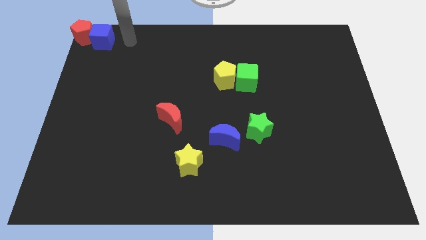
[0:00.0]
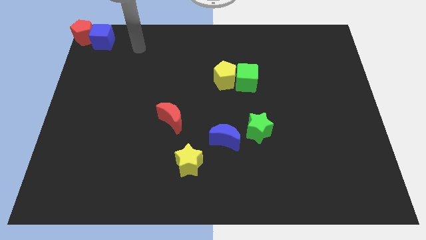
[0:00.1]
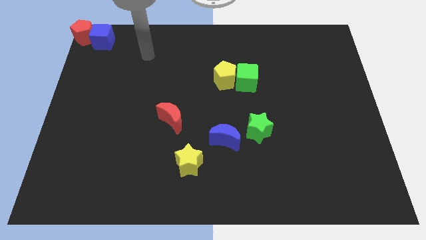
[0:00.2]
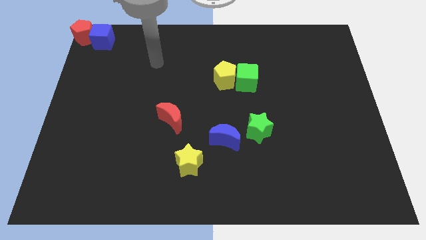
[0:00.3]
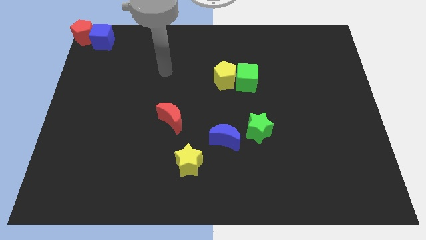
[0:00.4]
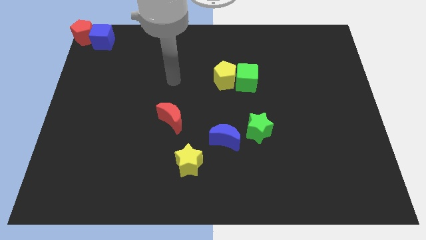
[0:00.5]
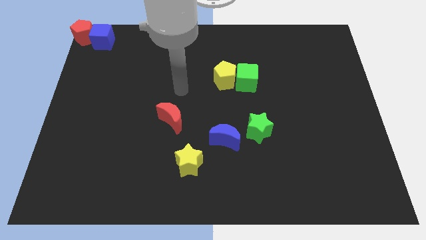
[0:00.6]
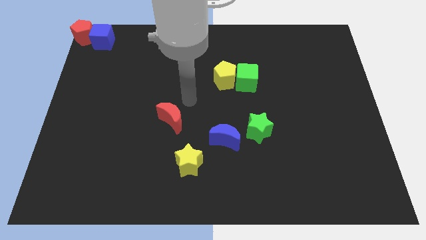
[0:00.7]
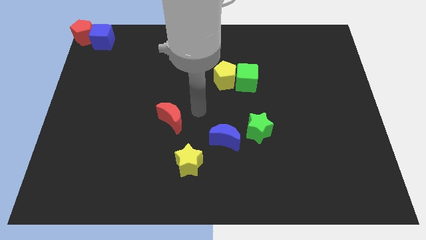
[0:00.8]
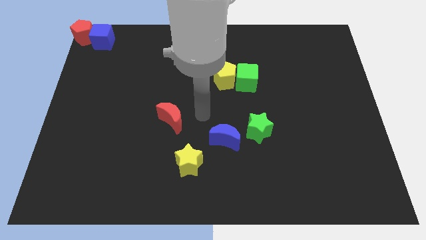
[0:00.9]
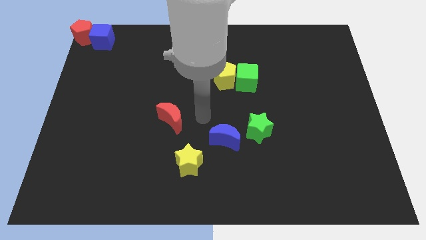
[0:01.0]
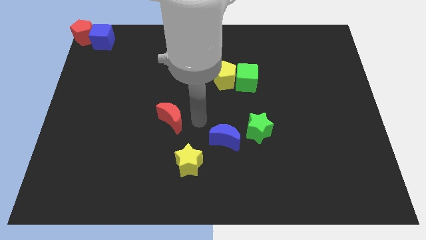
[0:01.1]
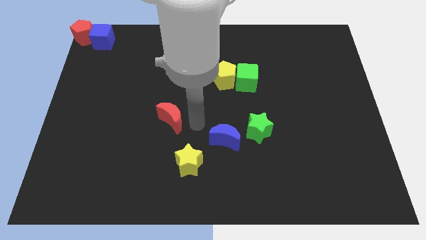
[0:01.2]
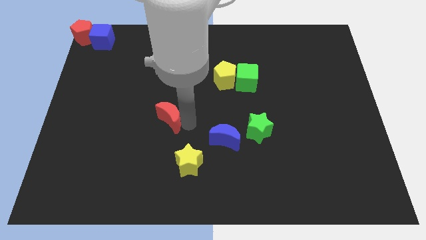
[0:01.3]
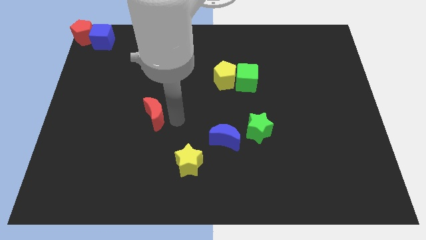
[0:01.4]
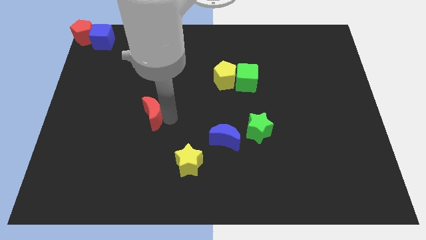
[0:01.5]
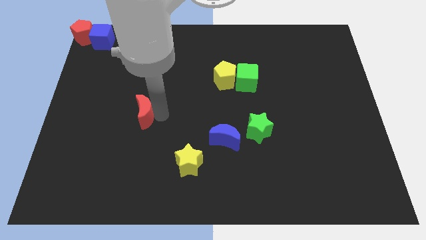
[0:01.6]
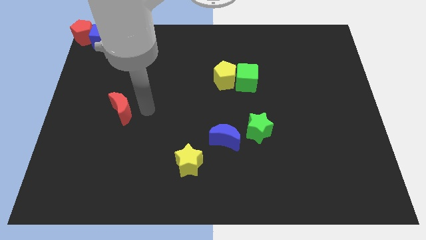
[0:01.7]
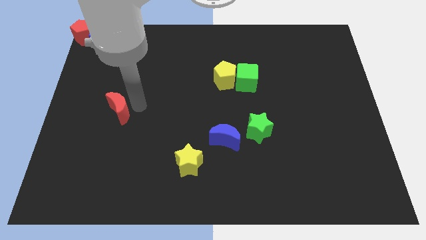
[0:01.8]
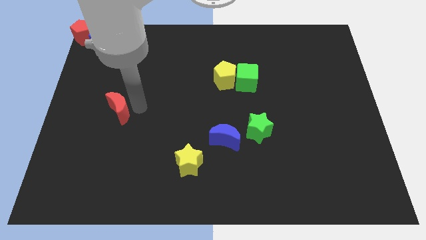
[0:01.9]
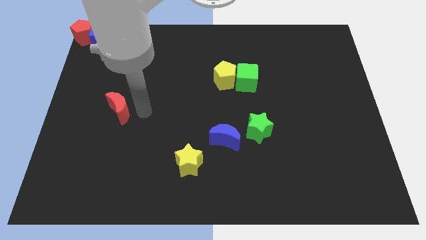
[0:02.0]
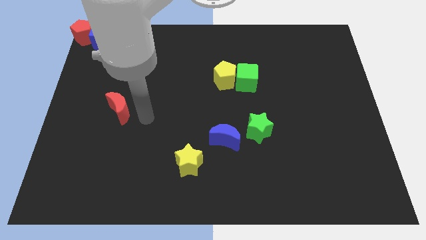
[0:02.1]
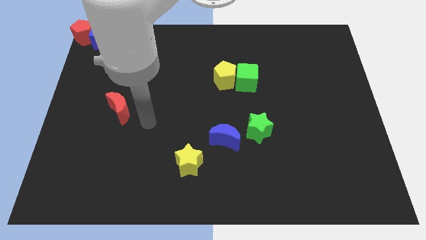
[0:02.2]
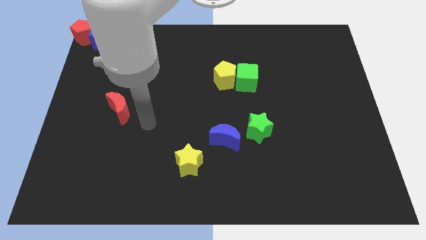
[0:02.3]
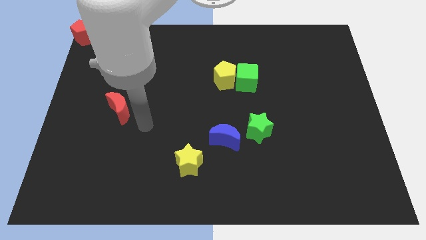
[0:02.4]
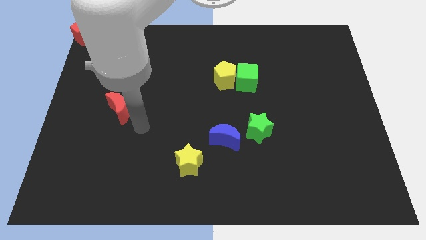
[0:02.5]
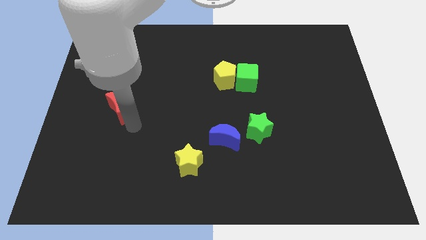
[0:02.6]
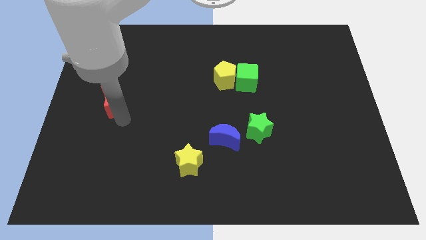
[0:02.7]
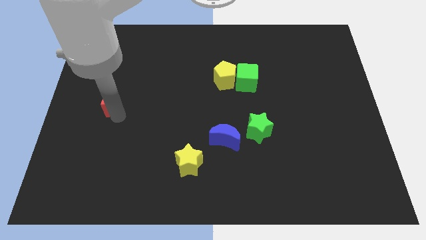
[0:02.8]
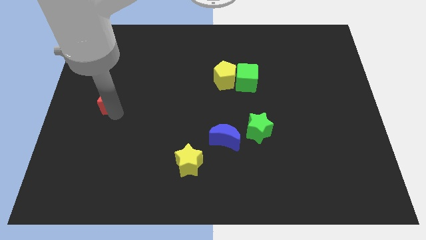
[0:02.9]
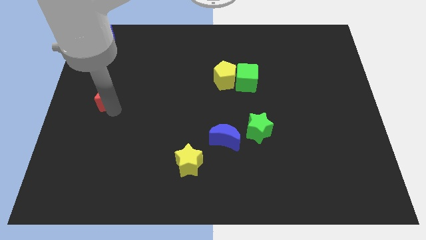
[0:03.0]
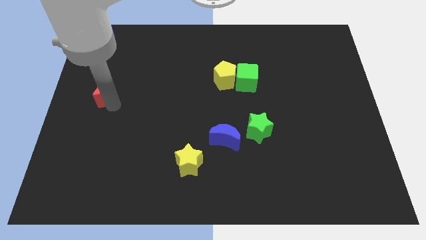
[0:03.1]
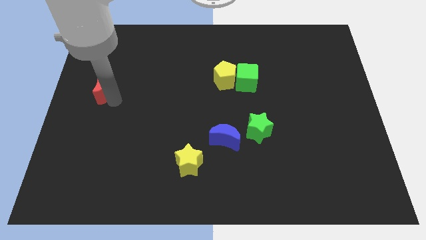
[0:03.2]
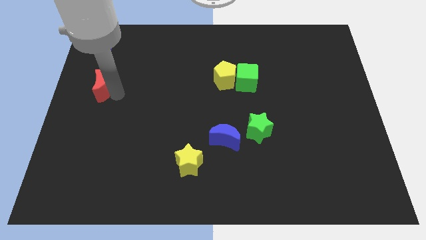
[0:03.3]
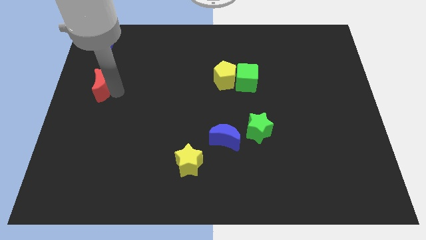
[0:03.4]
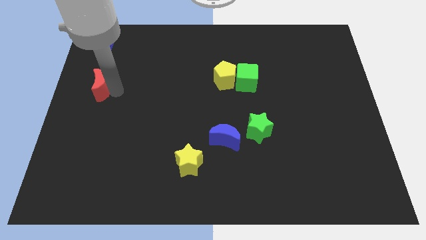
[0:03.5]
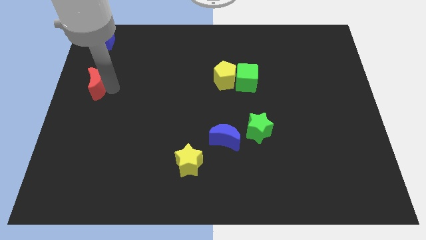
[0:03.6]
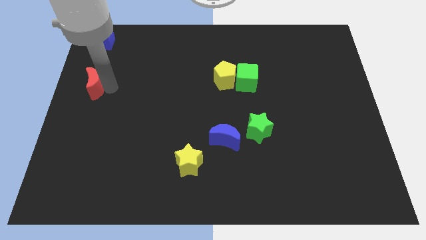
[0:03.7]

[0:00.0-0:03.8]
put the red moon vertically below the blue cube

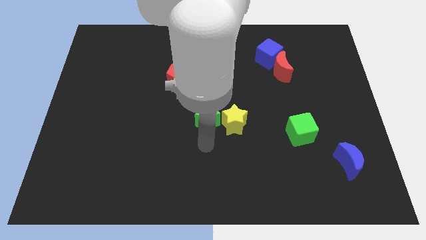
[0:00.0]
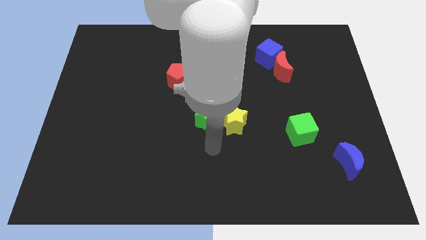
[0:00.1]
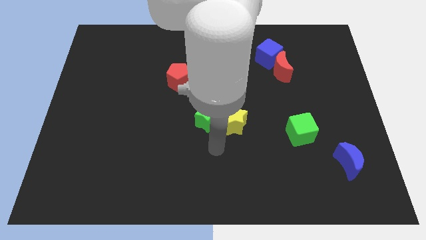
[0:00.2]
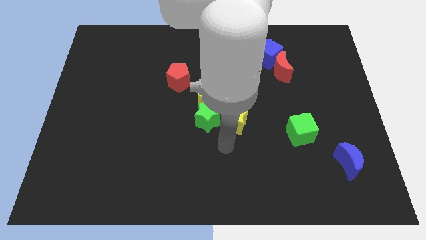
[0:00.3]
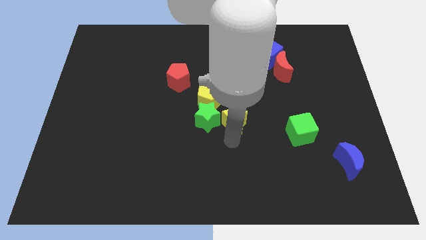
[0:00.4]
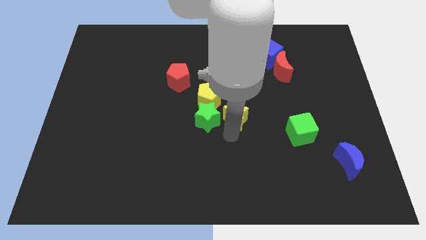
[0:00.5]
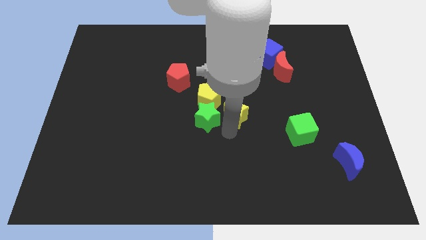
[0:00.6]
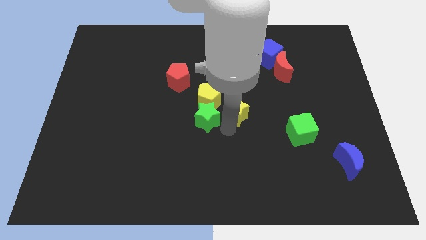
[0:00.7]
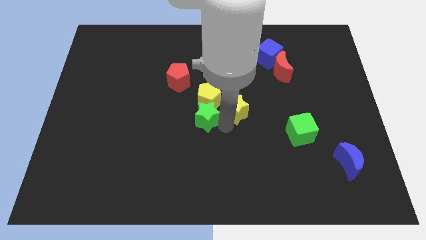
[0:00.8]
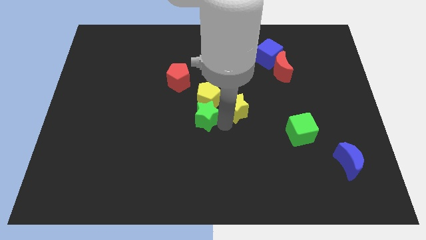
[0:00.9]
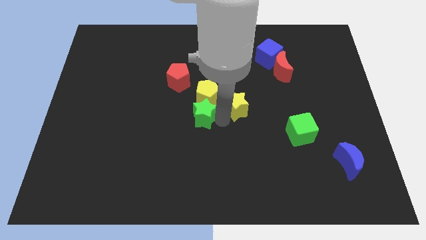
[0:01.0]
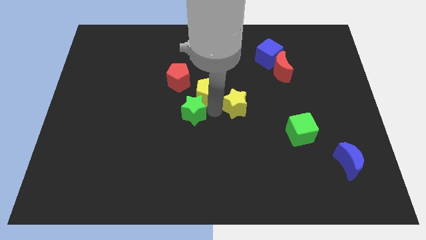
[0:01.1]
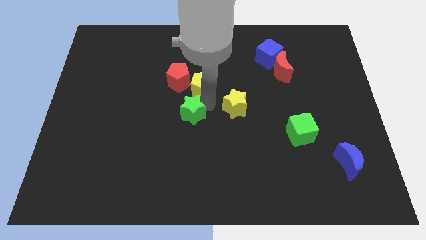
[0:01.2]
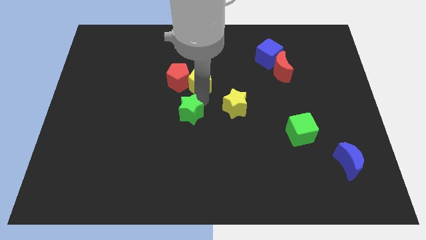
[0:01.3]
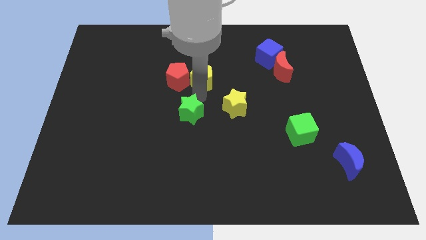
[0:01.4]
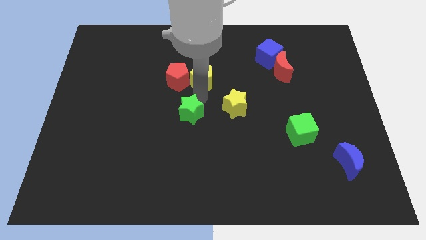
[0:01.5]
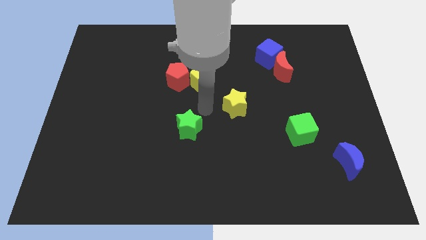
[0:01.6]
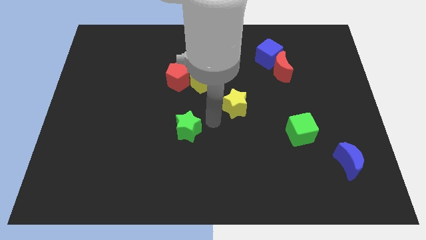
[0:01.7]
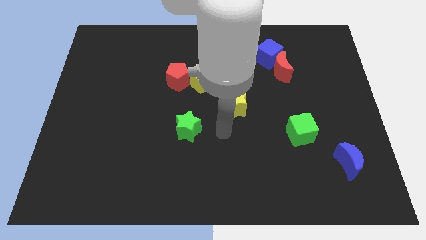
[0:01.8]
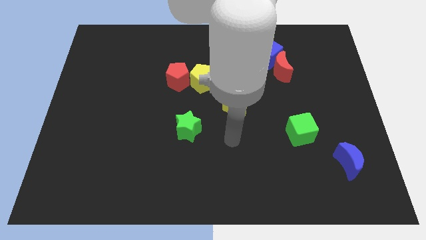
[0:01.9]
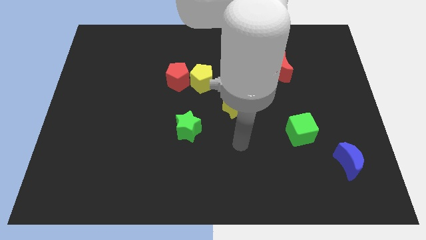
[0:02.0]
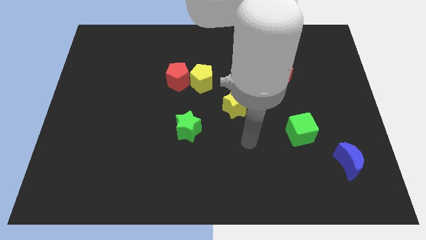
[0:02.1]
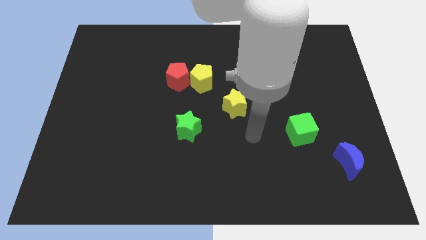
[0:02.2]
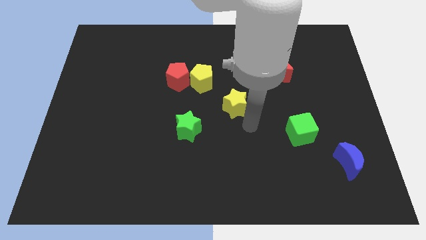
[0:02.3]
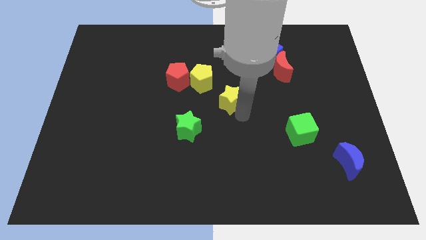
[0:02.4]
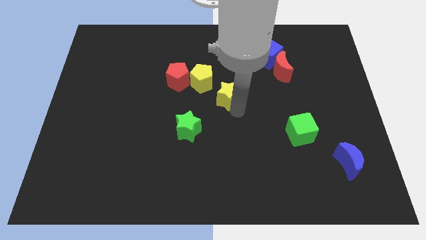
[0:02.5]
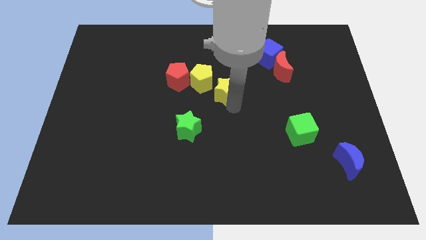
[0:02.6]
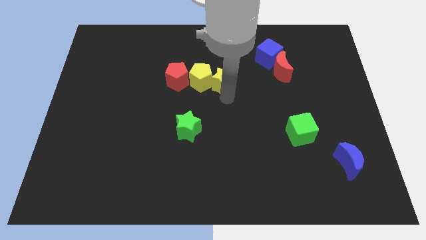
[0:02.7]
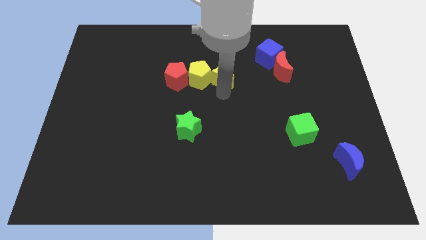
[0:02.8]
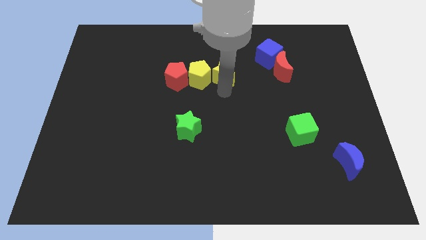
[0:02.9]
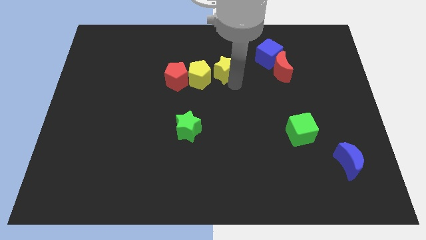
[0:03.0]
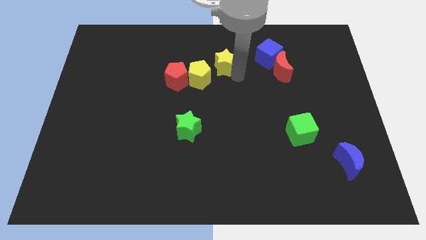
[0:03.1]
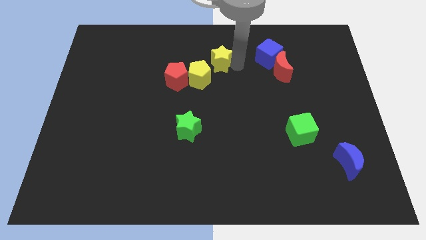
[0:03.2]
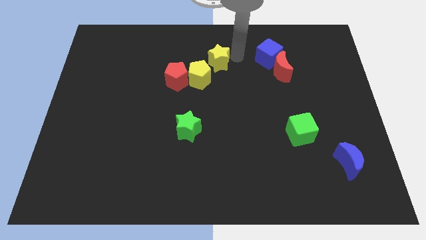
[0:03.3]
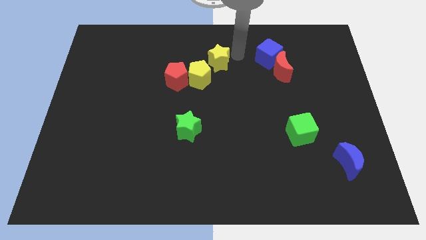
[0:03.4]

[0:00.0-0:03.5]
attach the yellow star to the yellow pentagon

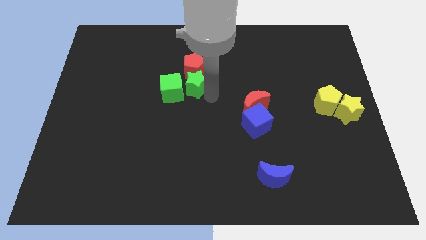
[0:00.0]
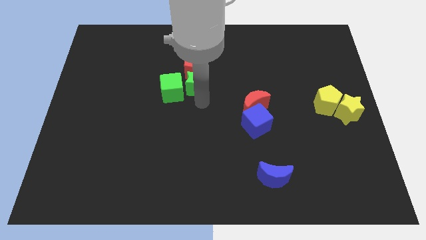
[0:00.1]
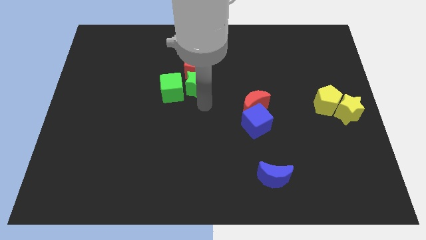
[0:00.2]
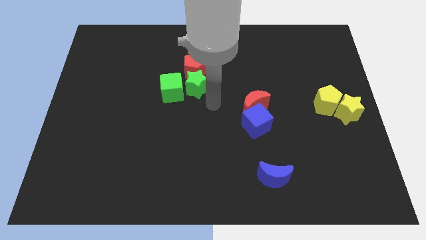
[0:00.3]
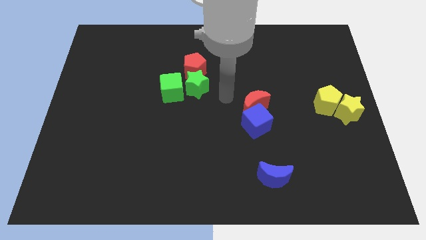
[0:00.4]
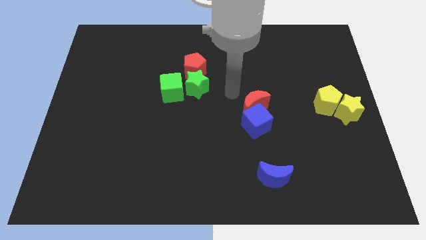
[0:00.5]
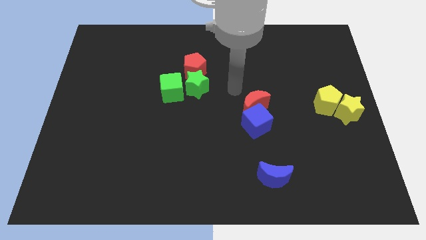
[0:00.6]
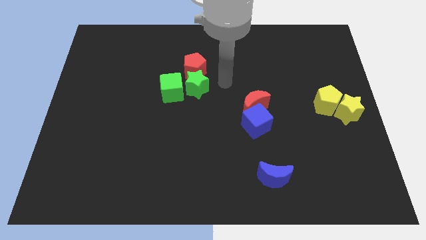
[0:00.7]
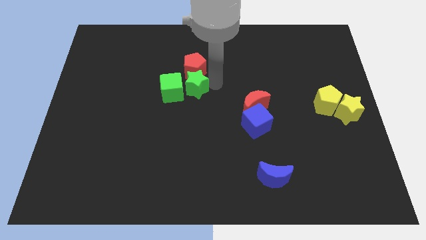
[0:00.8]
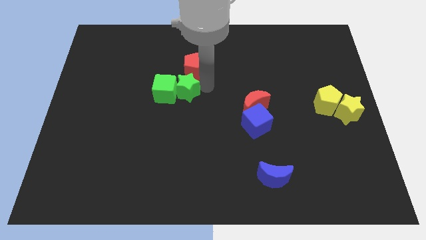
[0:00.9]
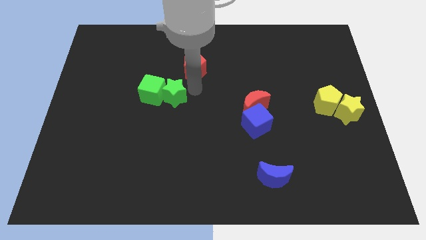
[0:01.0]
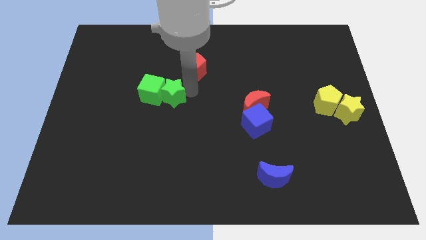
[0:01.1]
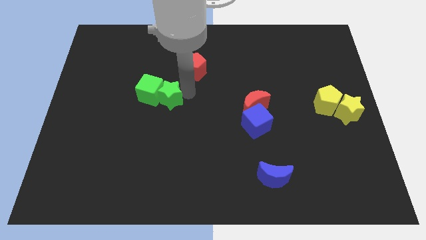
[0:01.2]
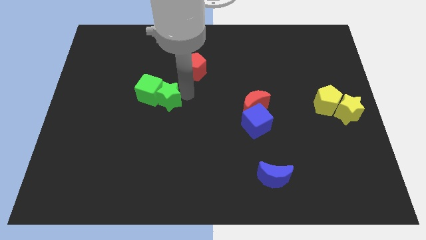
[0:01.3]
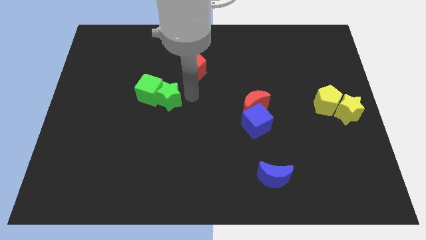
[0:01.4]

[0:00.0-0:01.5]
put the green star into the green cube
